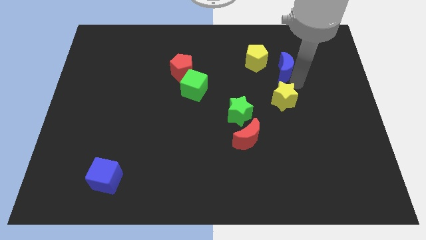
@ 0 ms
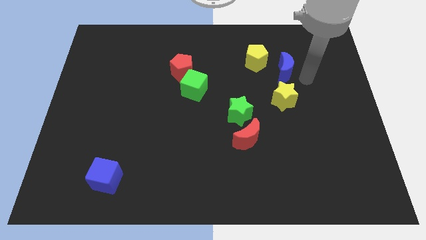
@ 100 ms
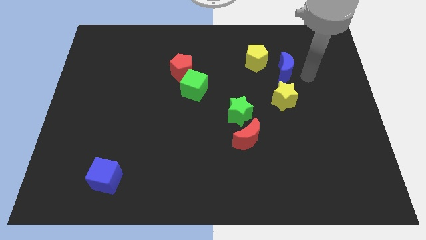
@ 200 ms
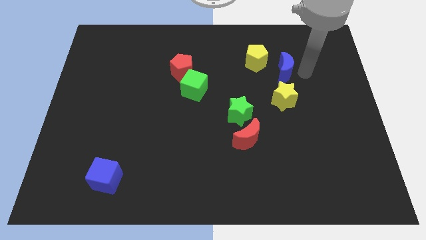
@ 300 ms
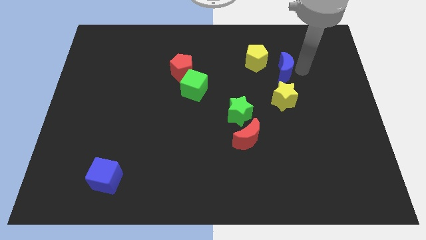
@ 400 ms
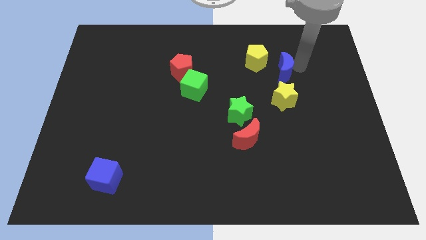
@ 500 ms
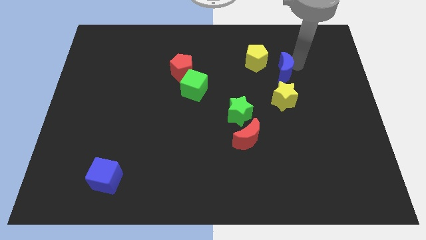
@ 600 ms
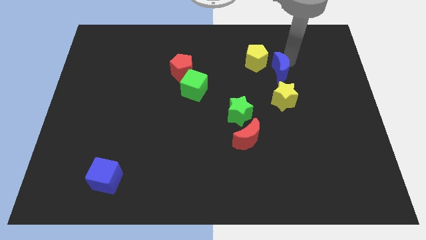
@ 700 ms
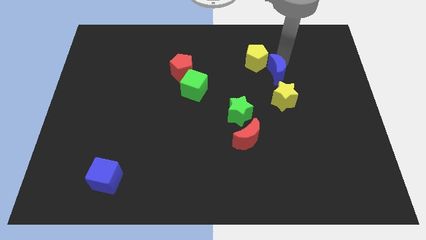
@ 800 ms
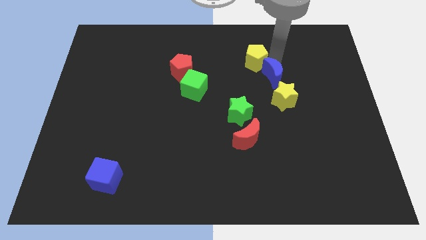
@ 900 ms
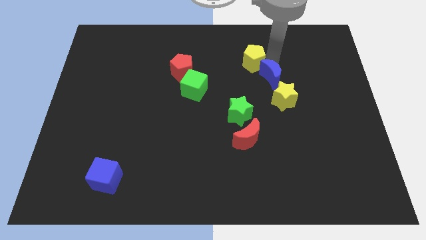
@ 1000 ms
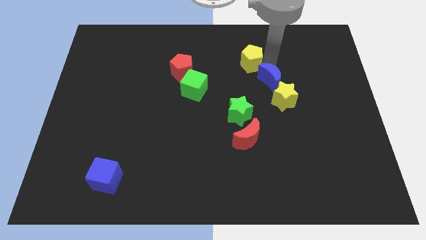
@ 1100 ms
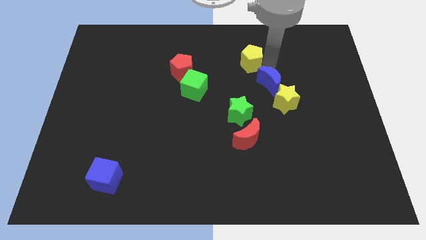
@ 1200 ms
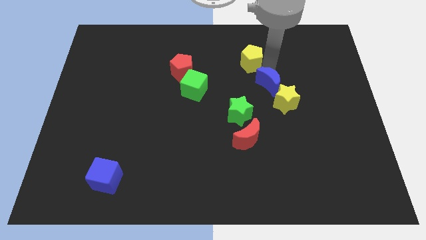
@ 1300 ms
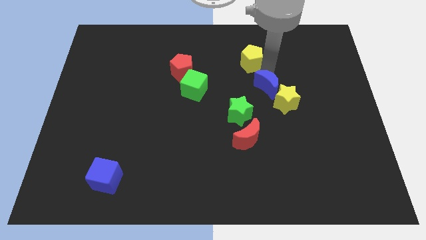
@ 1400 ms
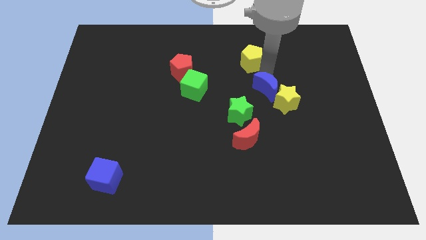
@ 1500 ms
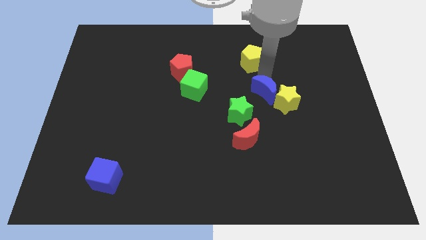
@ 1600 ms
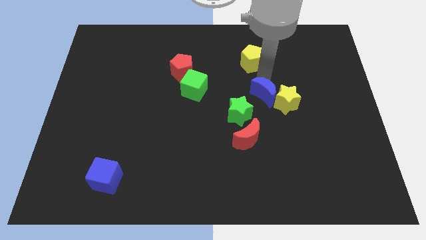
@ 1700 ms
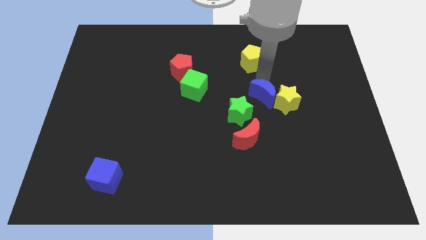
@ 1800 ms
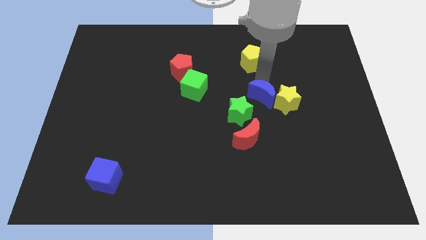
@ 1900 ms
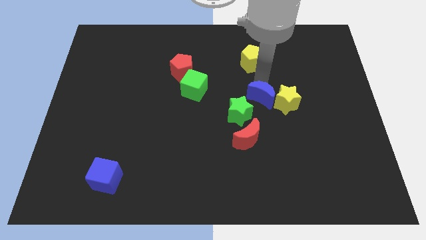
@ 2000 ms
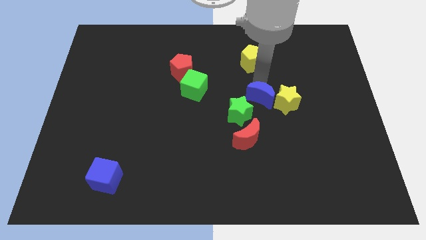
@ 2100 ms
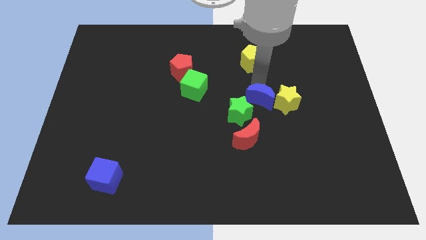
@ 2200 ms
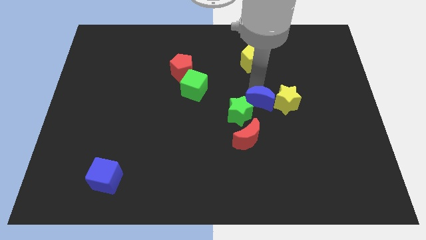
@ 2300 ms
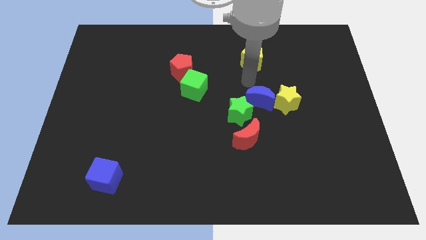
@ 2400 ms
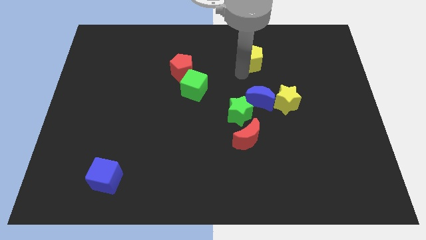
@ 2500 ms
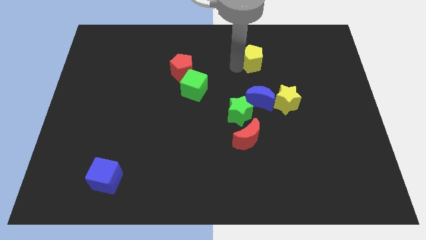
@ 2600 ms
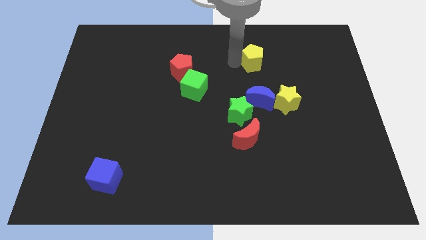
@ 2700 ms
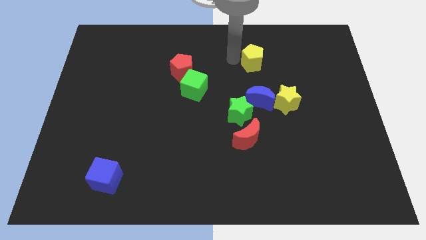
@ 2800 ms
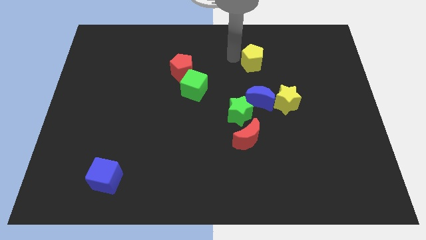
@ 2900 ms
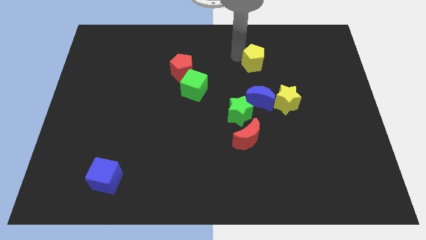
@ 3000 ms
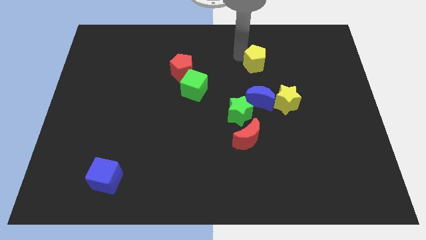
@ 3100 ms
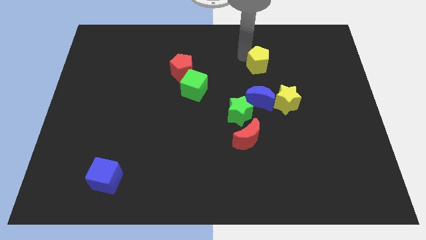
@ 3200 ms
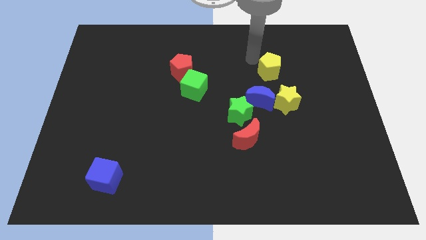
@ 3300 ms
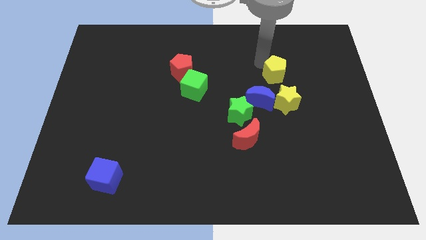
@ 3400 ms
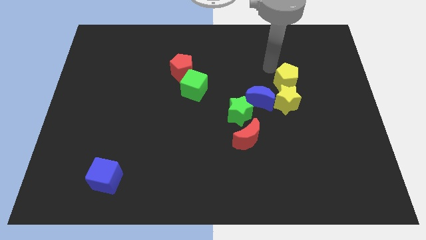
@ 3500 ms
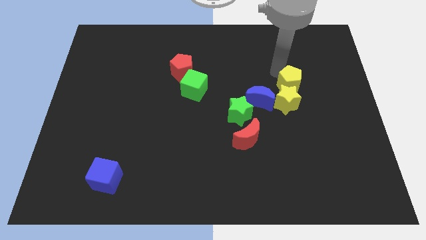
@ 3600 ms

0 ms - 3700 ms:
push yellow pentagon above yellow star

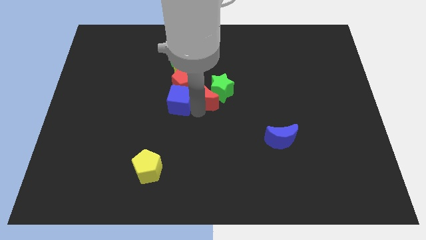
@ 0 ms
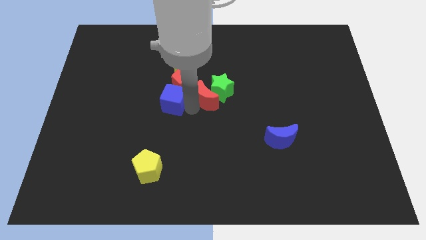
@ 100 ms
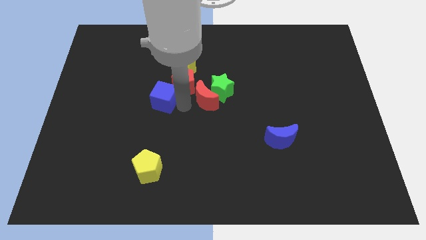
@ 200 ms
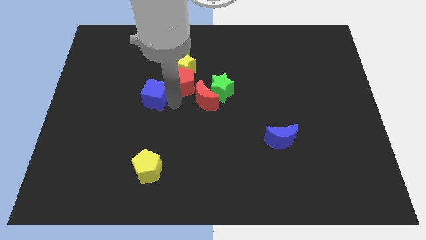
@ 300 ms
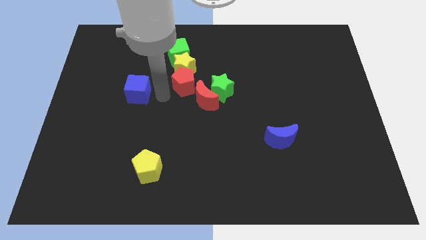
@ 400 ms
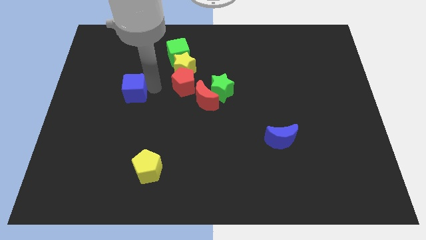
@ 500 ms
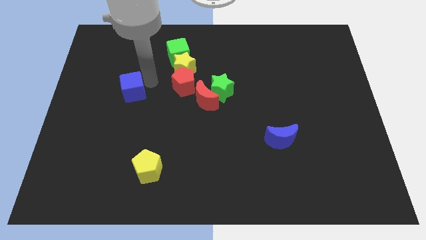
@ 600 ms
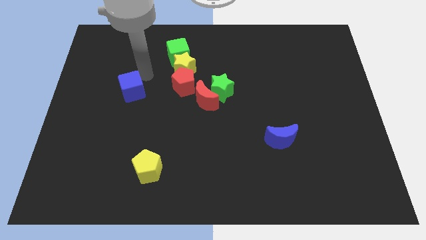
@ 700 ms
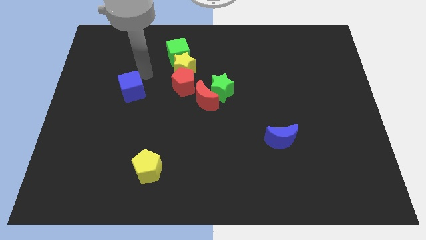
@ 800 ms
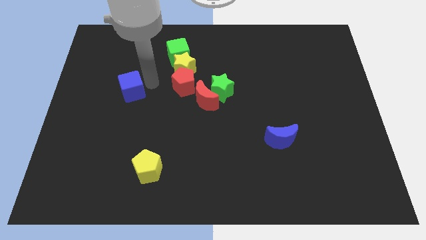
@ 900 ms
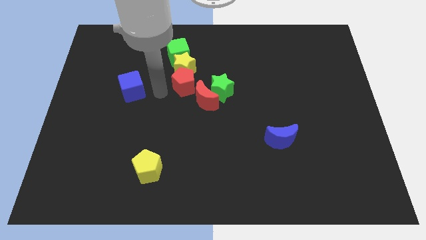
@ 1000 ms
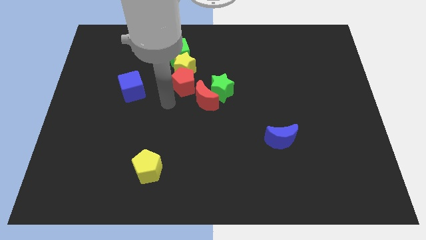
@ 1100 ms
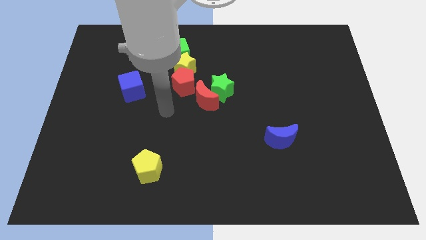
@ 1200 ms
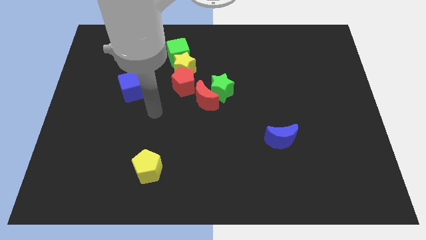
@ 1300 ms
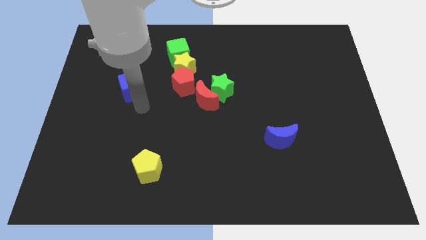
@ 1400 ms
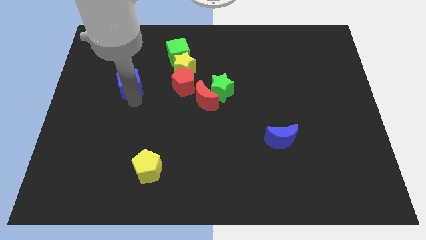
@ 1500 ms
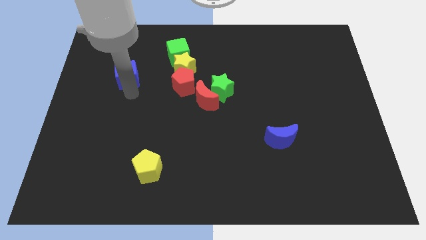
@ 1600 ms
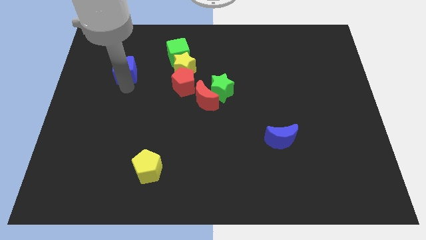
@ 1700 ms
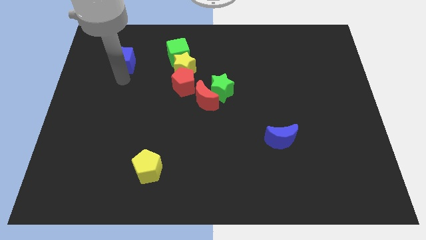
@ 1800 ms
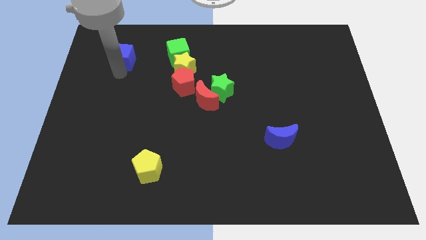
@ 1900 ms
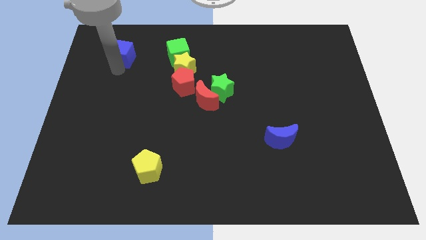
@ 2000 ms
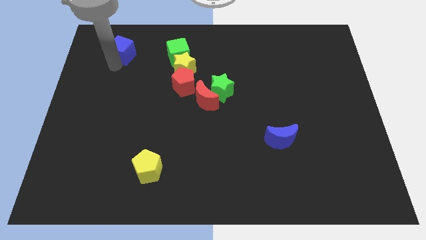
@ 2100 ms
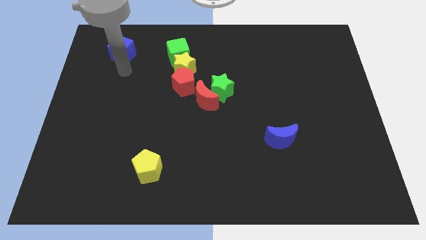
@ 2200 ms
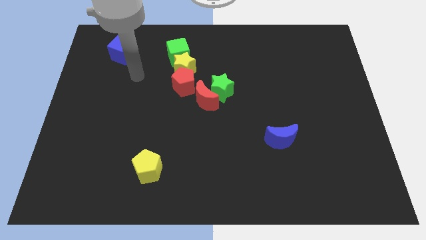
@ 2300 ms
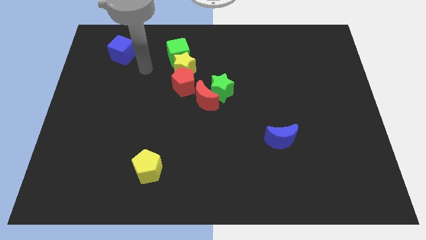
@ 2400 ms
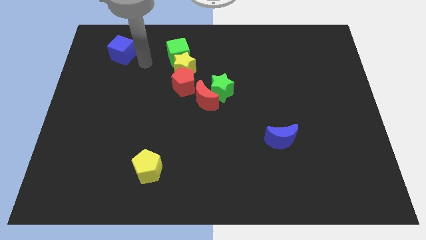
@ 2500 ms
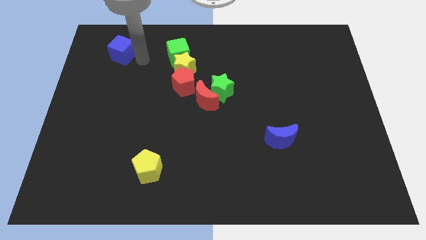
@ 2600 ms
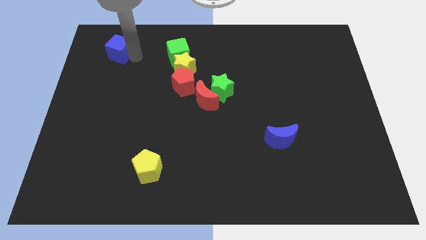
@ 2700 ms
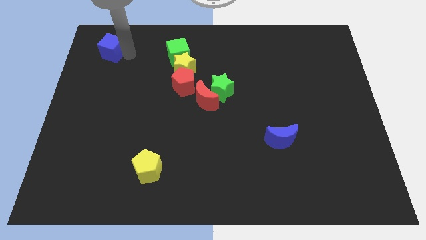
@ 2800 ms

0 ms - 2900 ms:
push the blue cube to the left of the green cube

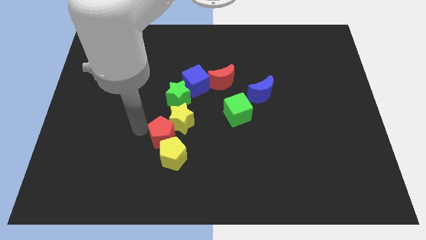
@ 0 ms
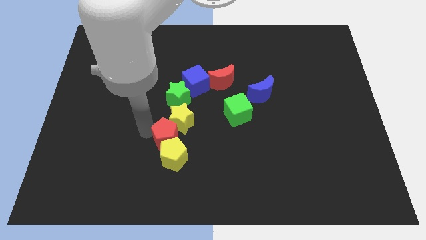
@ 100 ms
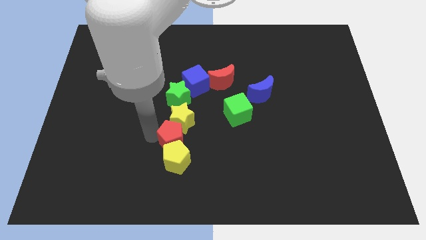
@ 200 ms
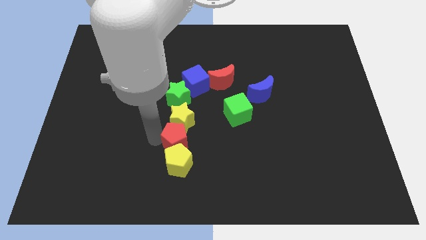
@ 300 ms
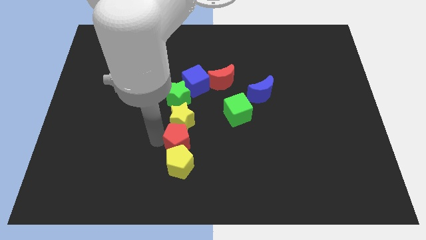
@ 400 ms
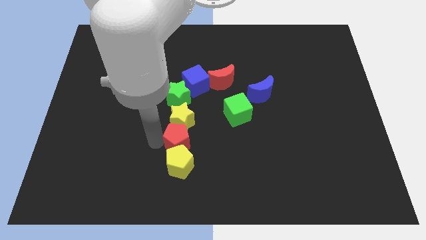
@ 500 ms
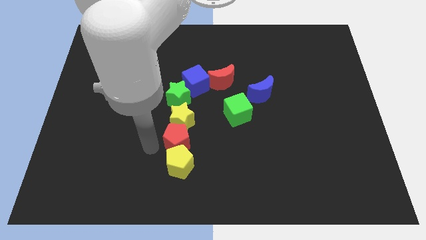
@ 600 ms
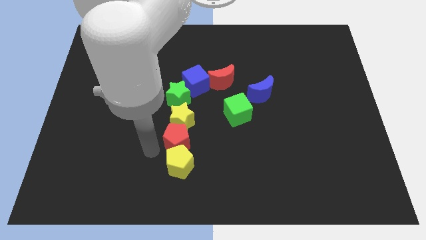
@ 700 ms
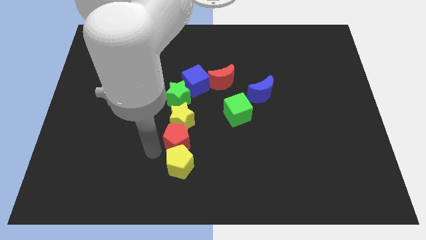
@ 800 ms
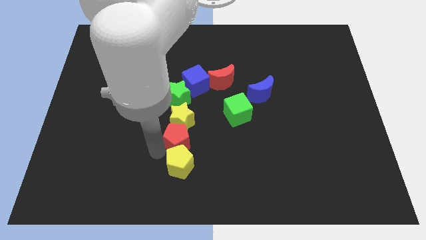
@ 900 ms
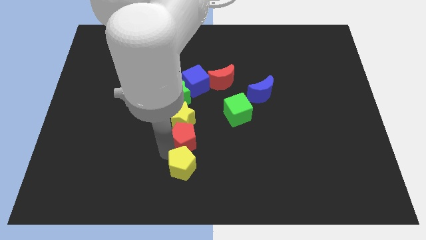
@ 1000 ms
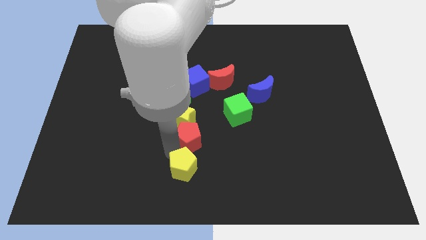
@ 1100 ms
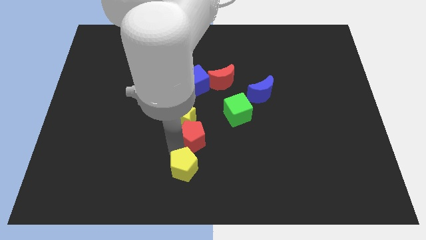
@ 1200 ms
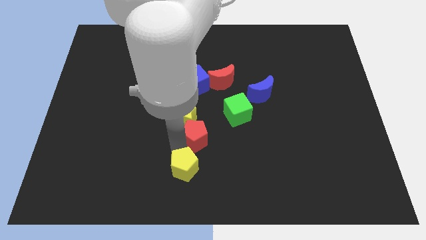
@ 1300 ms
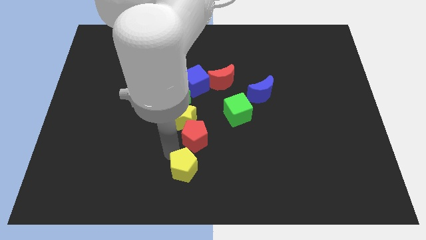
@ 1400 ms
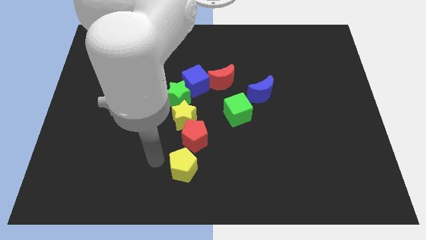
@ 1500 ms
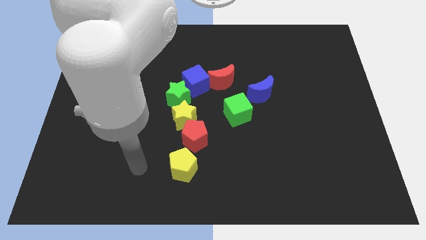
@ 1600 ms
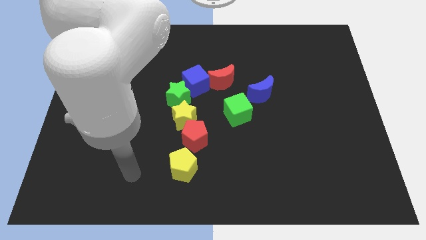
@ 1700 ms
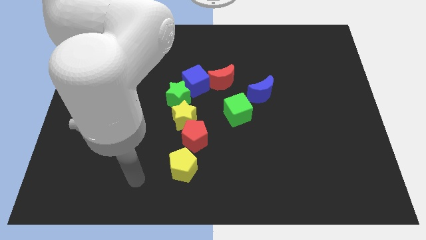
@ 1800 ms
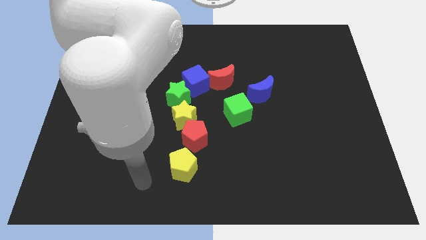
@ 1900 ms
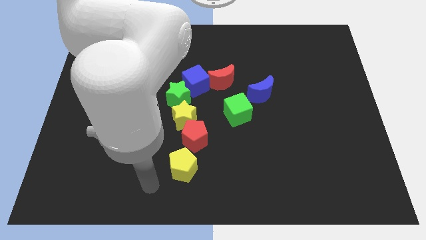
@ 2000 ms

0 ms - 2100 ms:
slightly move red pentagon to the right side

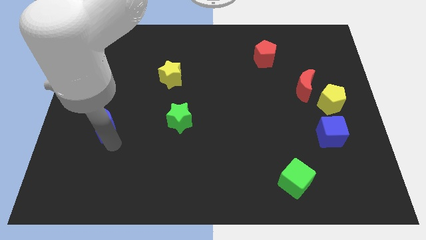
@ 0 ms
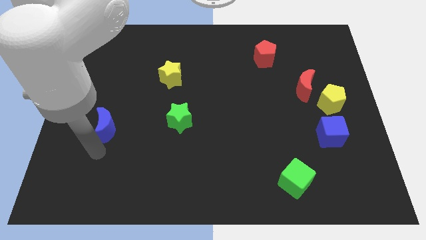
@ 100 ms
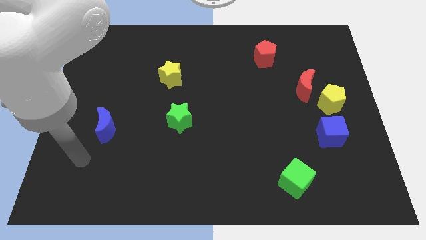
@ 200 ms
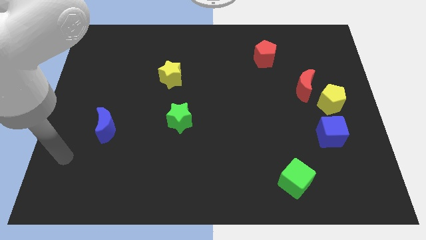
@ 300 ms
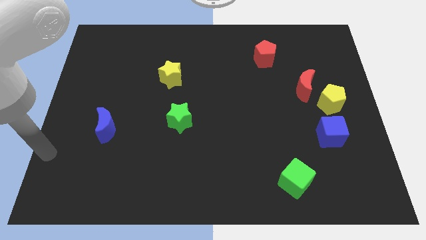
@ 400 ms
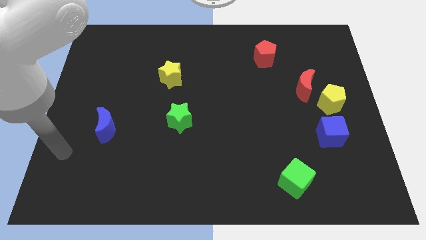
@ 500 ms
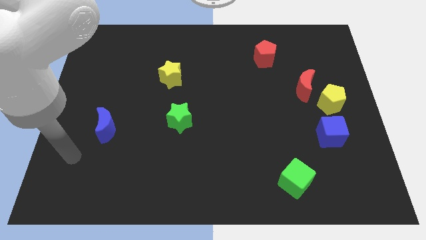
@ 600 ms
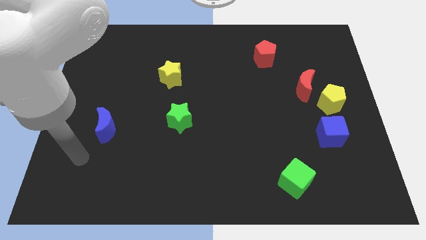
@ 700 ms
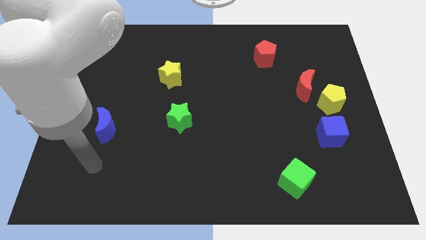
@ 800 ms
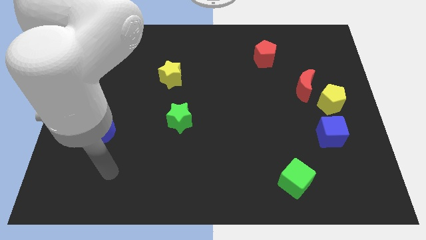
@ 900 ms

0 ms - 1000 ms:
move arm away from the blue moon
